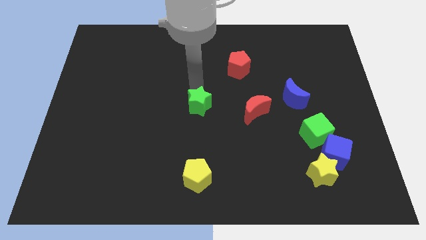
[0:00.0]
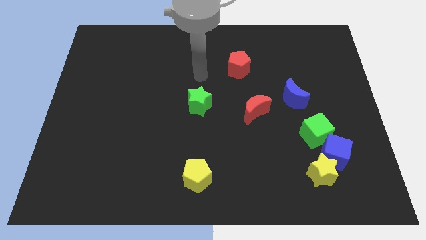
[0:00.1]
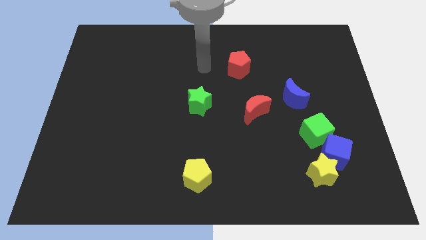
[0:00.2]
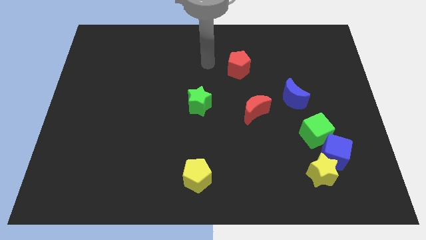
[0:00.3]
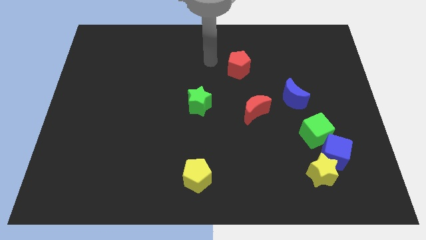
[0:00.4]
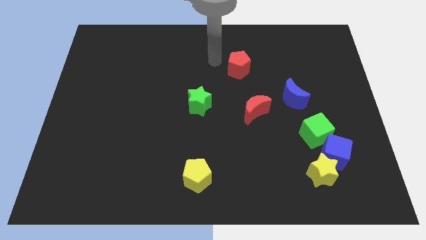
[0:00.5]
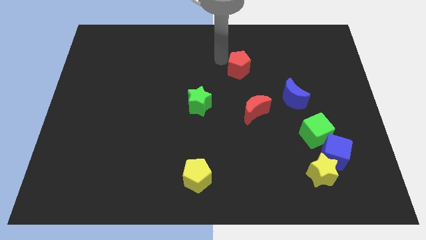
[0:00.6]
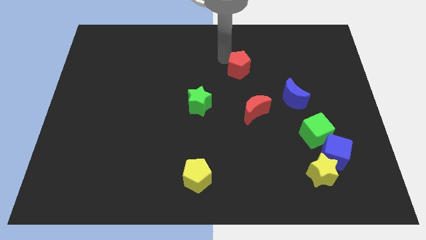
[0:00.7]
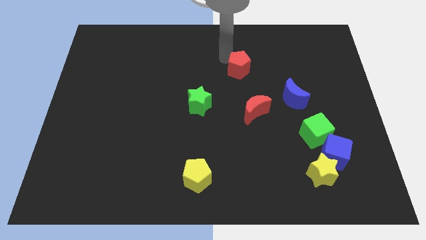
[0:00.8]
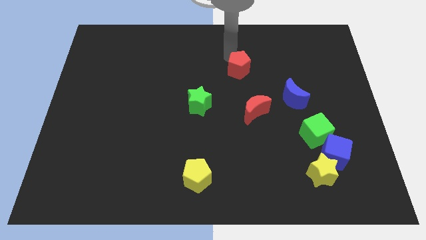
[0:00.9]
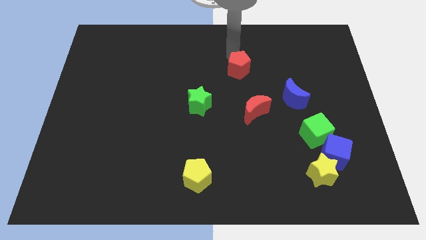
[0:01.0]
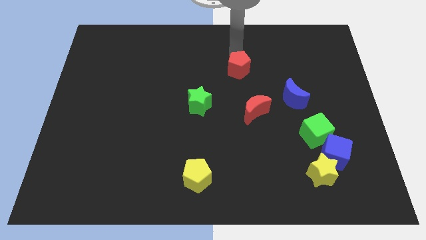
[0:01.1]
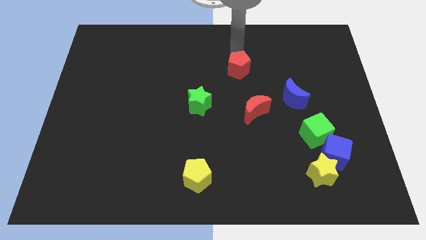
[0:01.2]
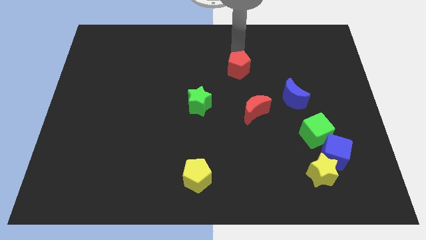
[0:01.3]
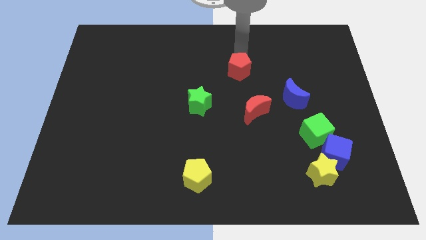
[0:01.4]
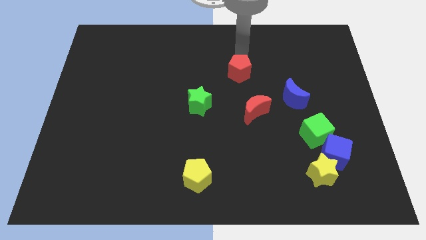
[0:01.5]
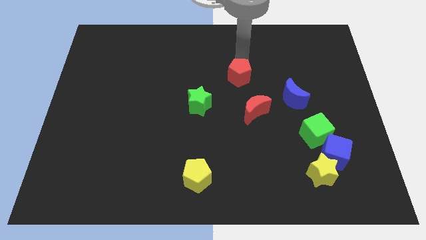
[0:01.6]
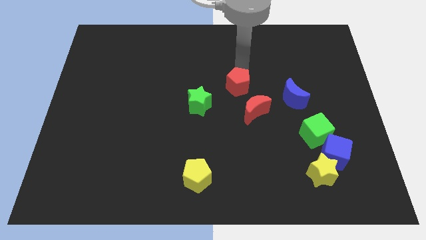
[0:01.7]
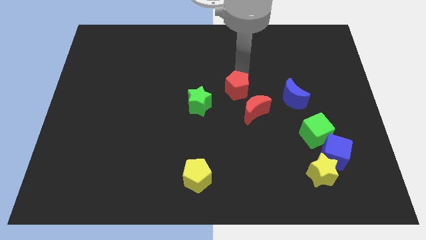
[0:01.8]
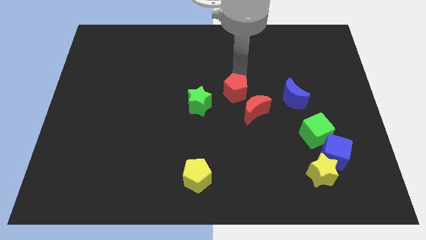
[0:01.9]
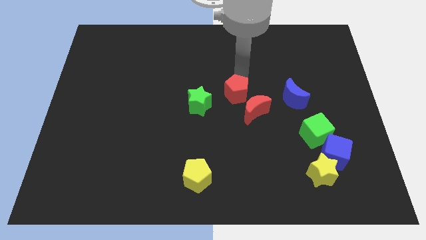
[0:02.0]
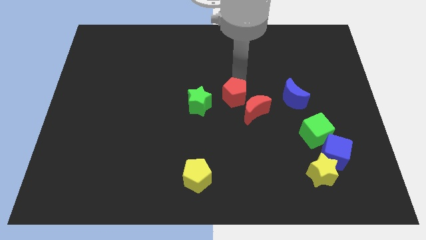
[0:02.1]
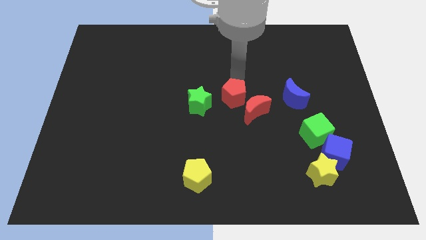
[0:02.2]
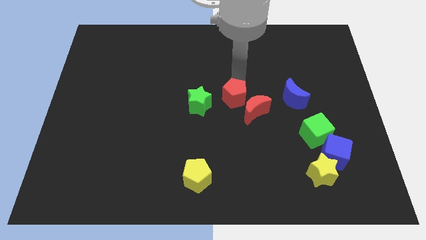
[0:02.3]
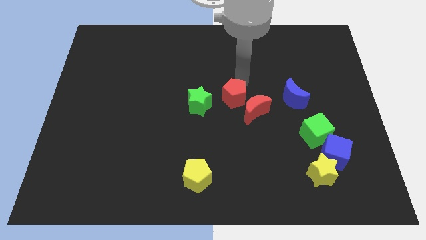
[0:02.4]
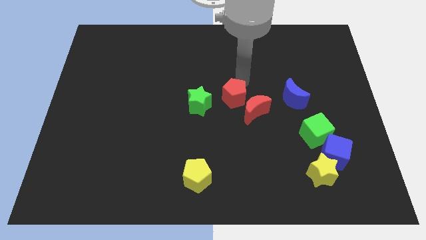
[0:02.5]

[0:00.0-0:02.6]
slide the red pentagon close to the red crescent

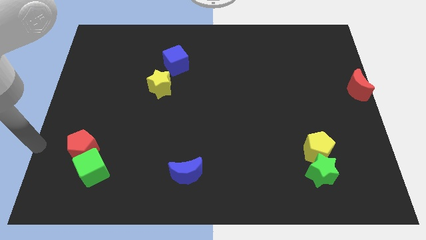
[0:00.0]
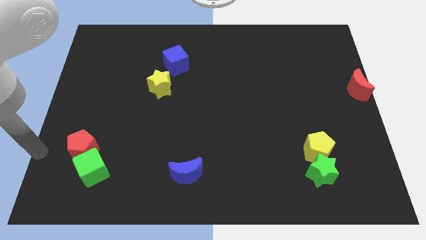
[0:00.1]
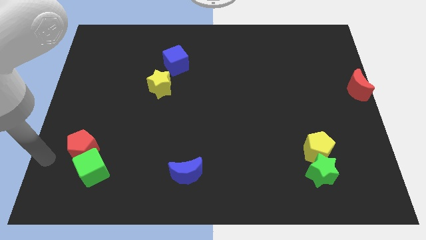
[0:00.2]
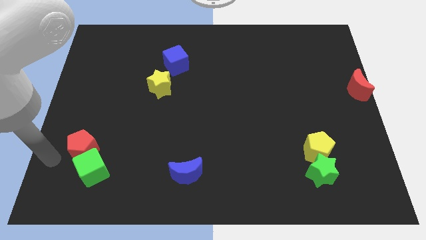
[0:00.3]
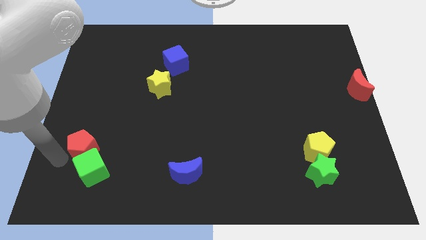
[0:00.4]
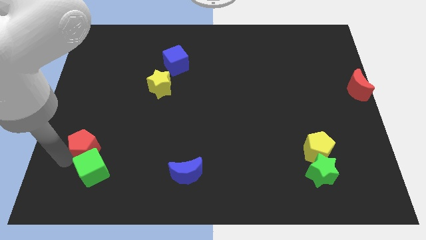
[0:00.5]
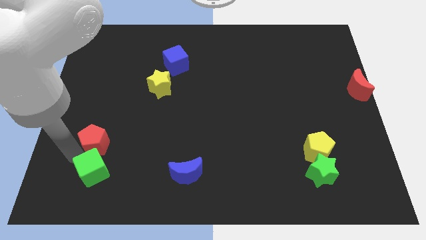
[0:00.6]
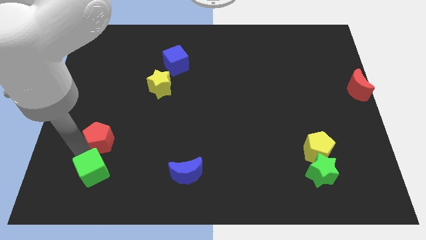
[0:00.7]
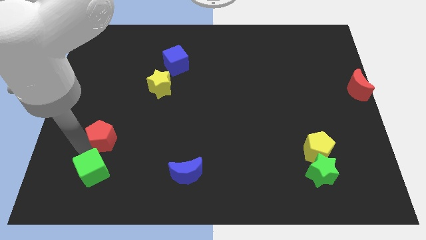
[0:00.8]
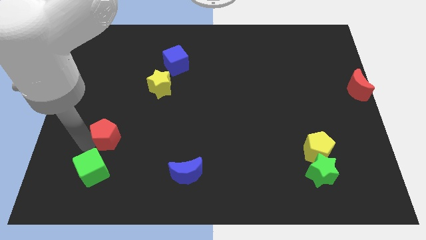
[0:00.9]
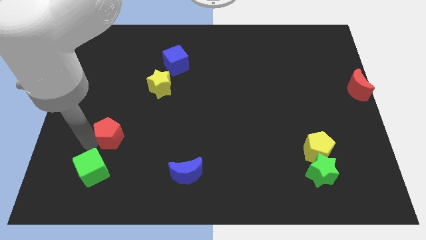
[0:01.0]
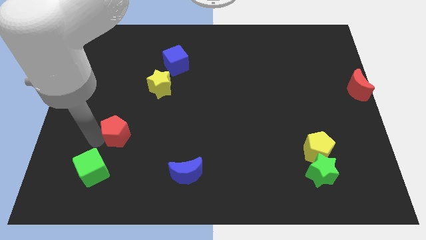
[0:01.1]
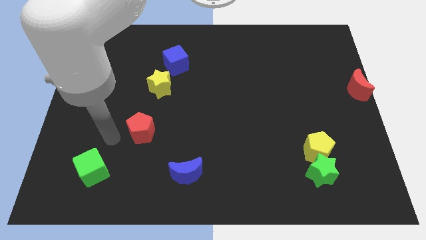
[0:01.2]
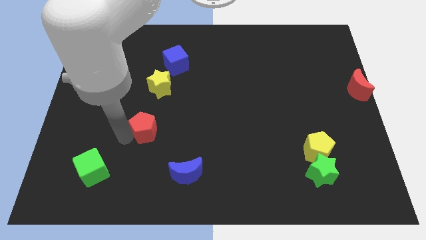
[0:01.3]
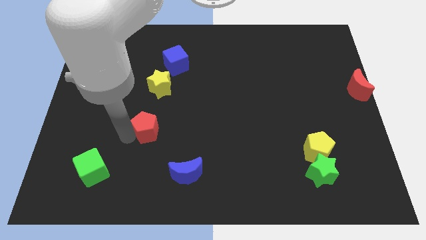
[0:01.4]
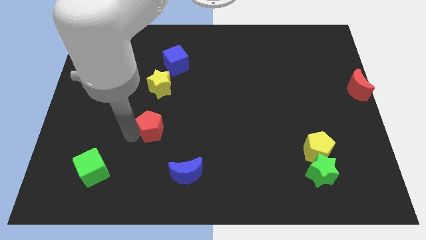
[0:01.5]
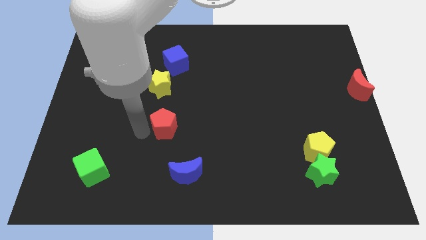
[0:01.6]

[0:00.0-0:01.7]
separate the red pentagon from the green cube

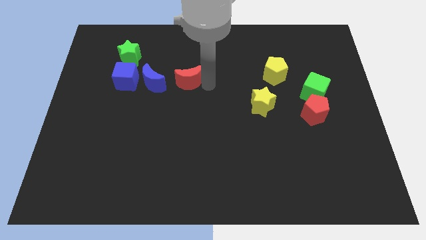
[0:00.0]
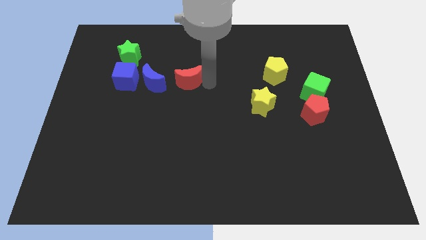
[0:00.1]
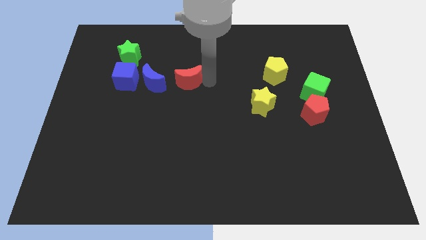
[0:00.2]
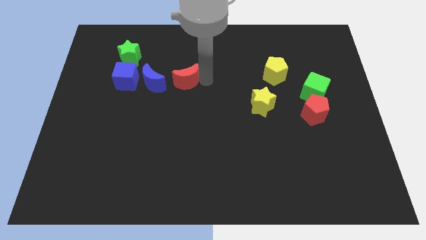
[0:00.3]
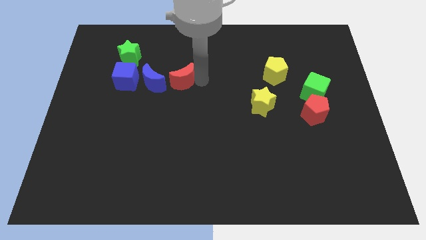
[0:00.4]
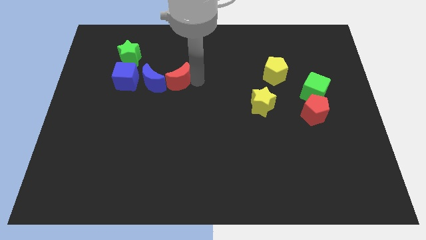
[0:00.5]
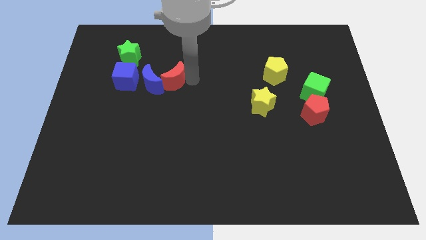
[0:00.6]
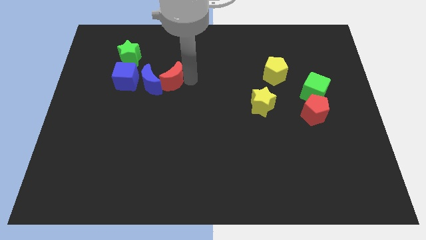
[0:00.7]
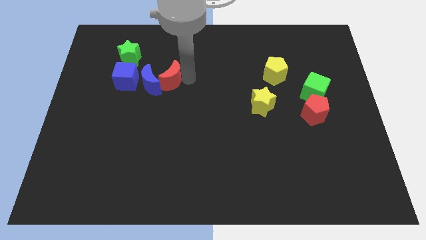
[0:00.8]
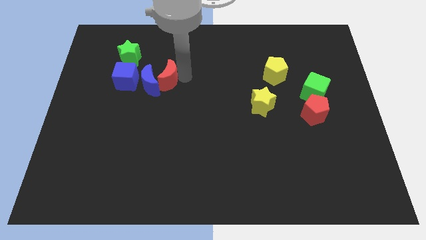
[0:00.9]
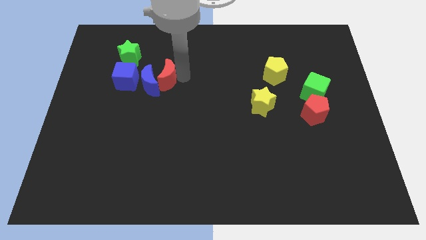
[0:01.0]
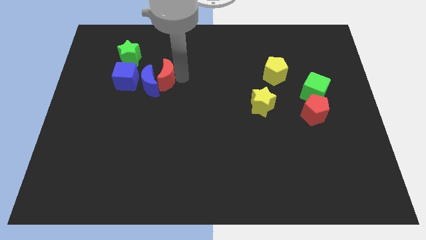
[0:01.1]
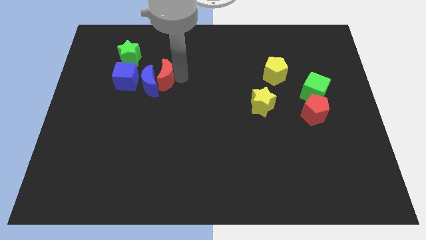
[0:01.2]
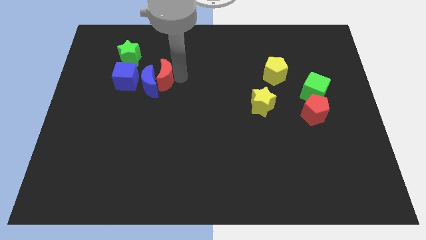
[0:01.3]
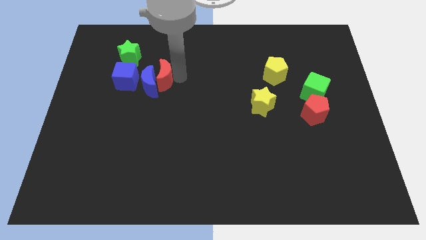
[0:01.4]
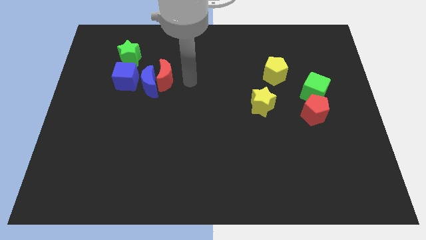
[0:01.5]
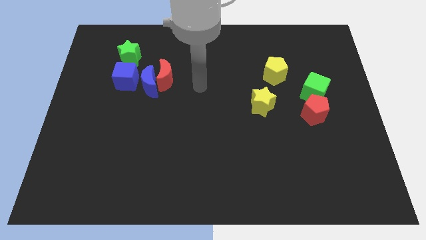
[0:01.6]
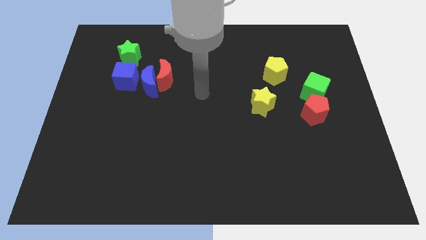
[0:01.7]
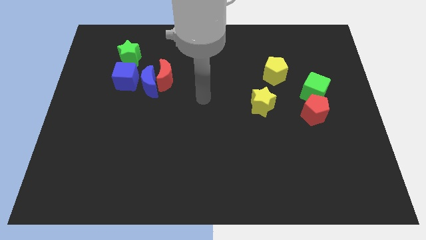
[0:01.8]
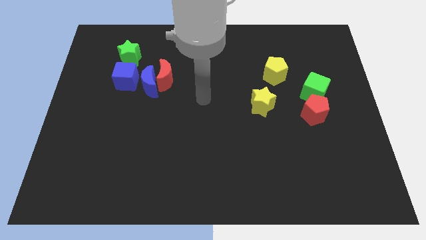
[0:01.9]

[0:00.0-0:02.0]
push the red moon into the blue moon

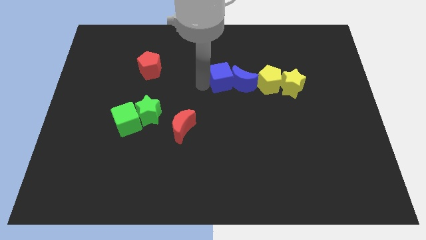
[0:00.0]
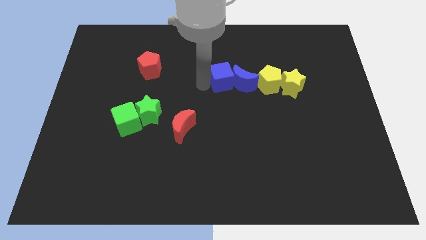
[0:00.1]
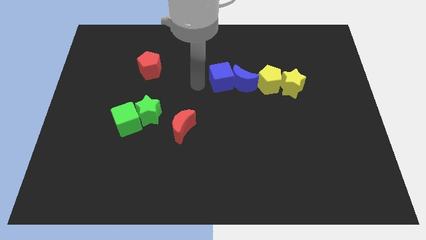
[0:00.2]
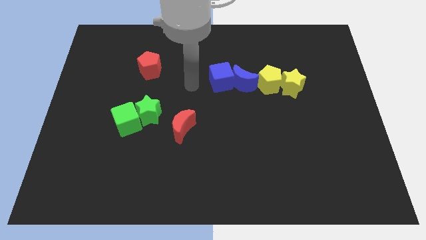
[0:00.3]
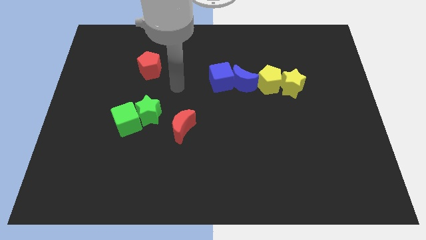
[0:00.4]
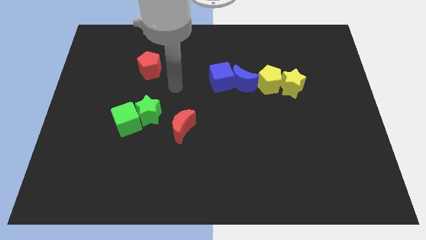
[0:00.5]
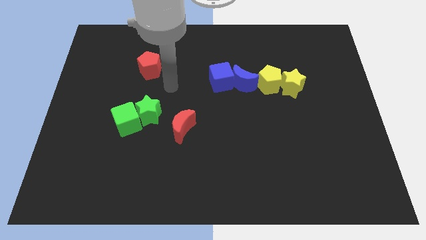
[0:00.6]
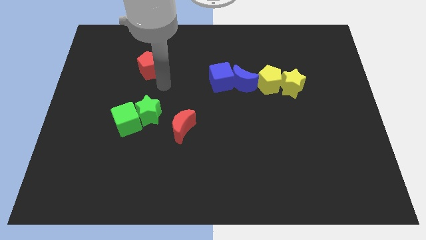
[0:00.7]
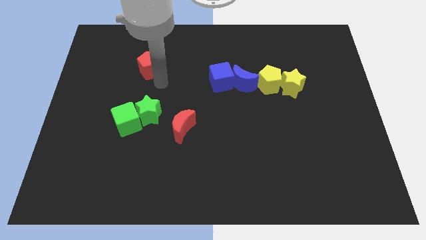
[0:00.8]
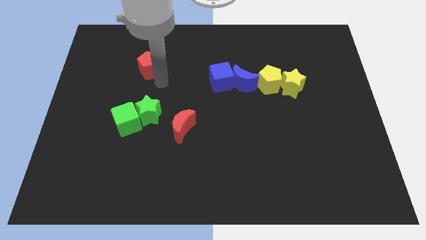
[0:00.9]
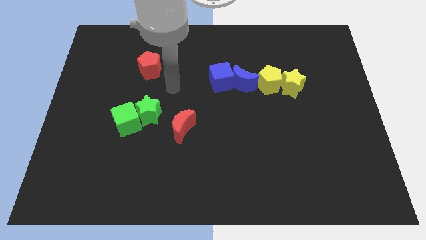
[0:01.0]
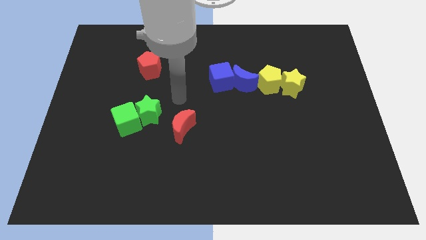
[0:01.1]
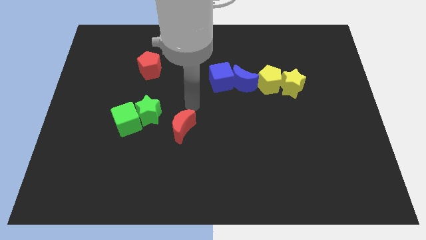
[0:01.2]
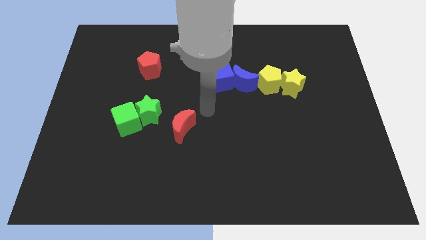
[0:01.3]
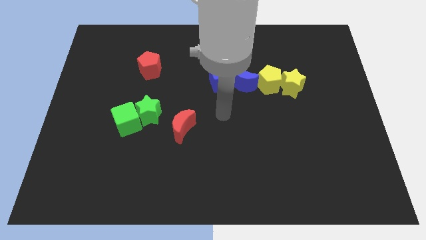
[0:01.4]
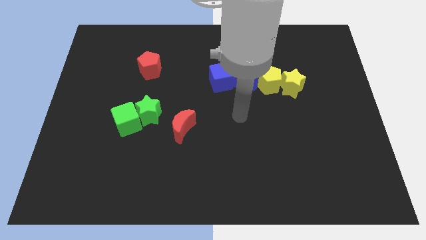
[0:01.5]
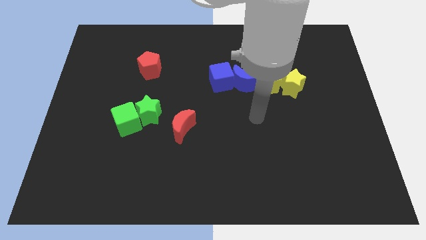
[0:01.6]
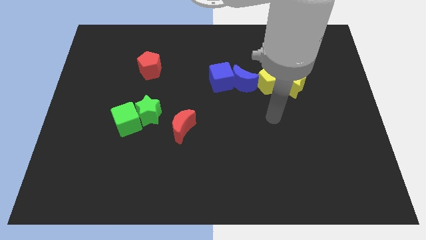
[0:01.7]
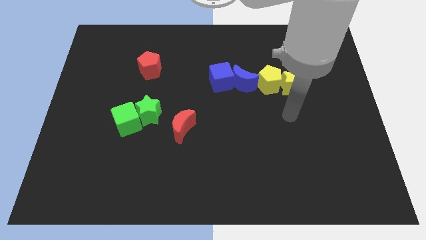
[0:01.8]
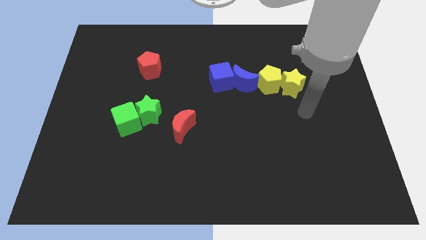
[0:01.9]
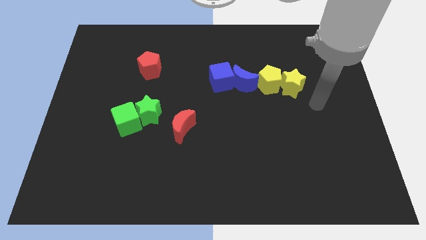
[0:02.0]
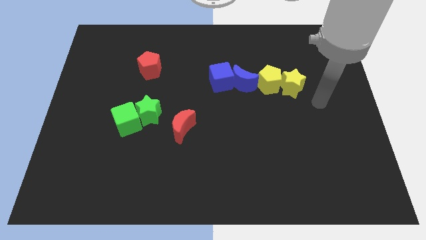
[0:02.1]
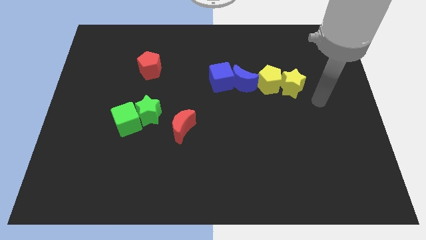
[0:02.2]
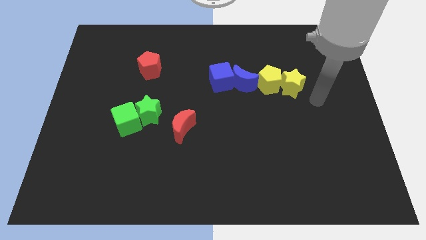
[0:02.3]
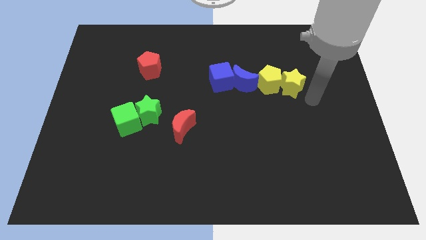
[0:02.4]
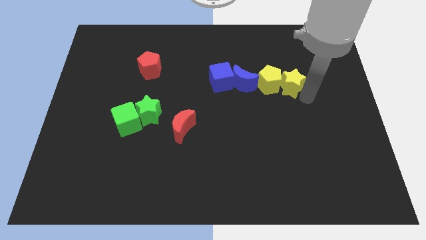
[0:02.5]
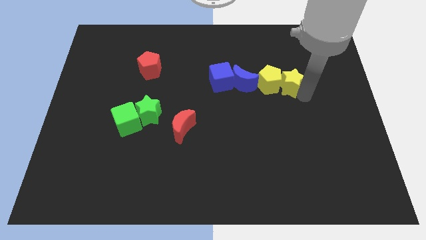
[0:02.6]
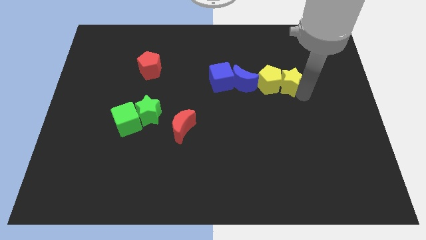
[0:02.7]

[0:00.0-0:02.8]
place your arm to the right of yellow star
